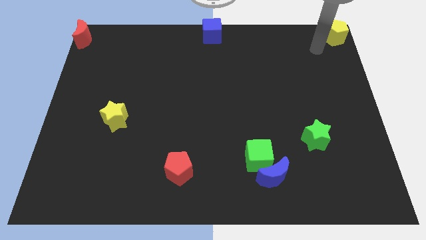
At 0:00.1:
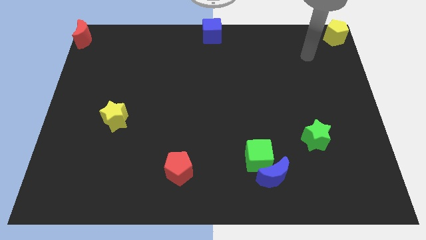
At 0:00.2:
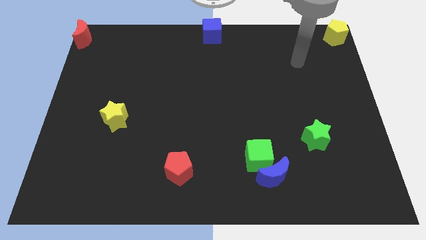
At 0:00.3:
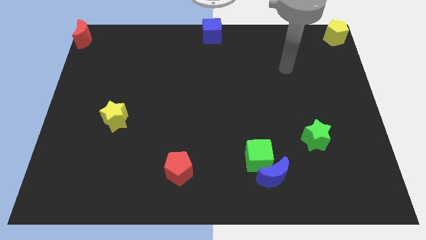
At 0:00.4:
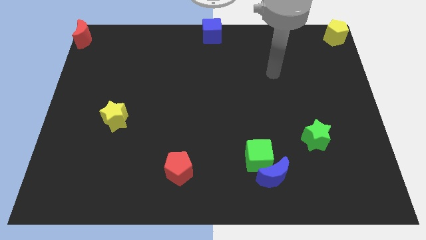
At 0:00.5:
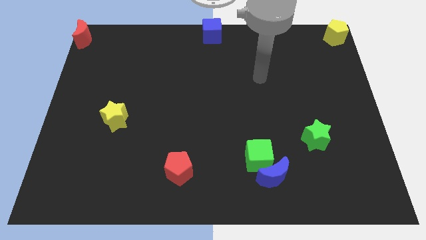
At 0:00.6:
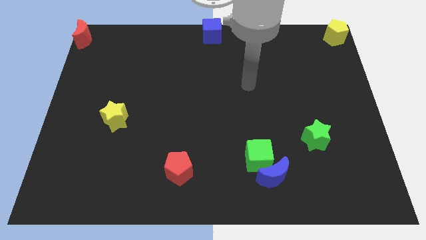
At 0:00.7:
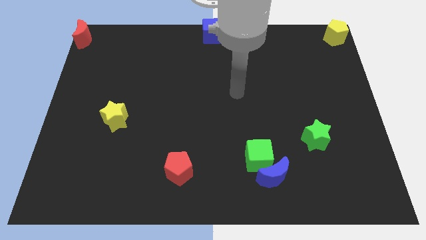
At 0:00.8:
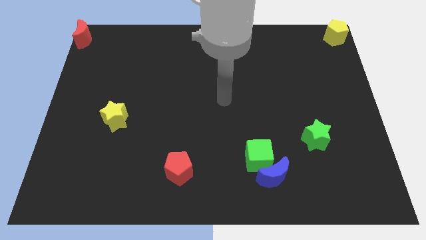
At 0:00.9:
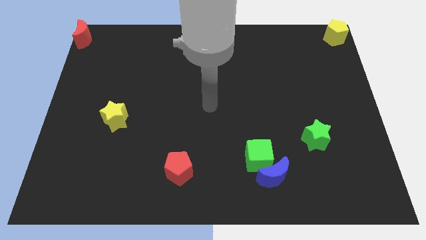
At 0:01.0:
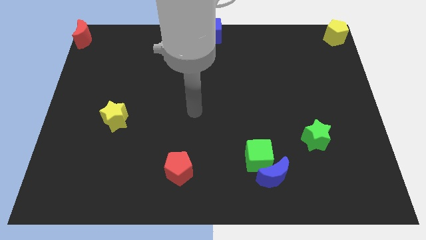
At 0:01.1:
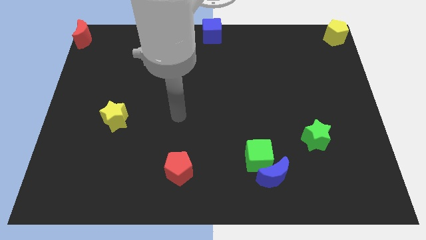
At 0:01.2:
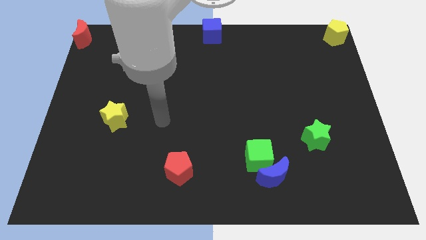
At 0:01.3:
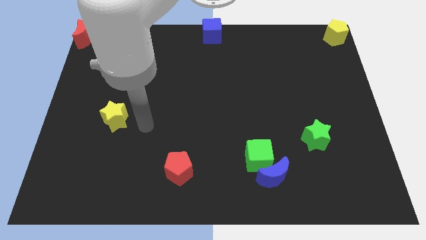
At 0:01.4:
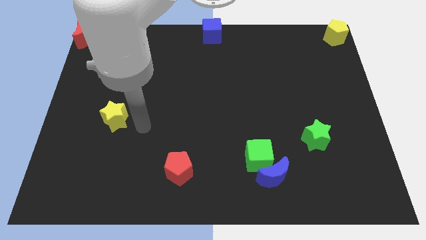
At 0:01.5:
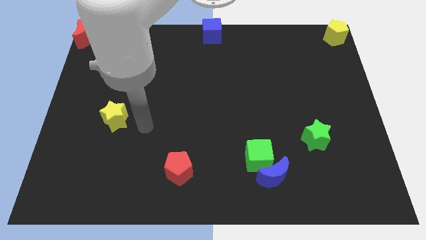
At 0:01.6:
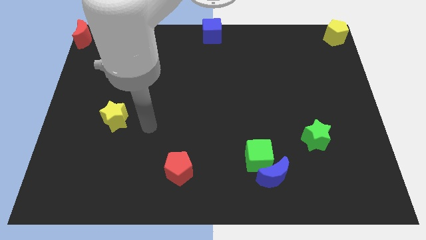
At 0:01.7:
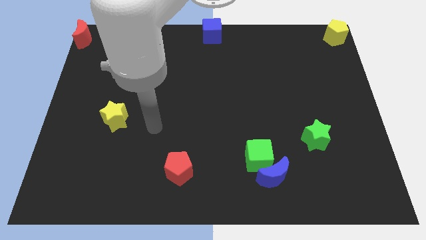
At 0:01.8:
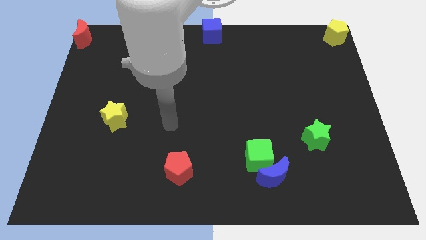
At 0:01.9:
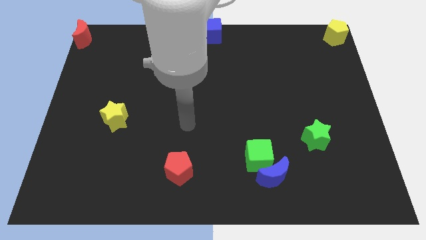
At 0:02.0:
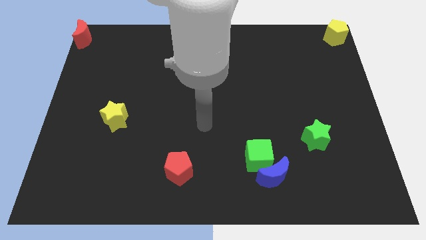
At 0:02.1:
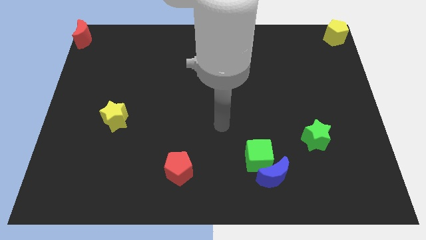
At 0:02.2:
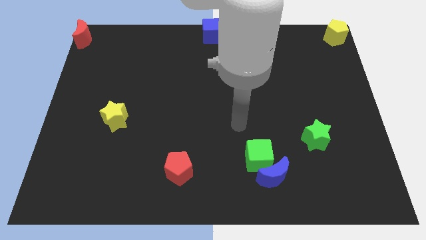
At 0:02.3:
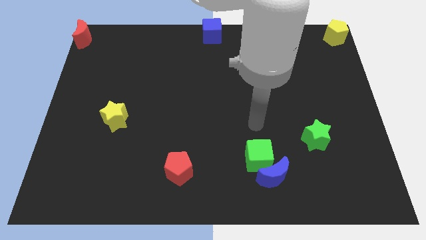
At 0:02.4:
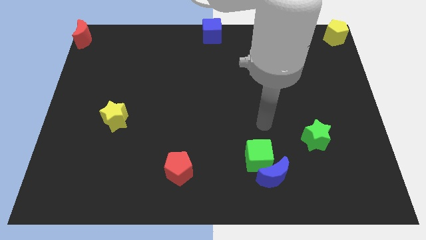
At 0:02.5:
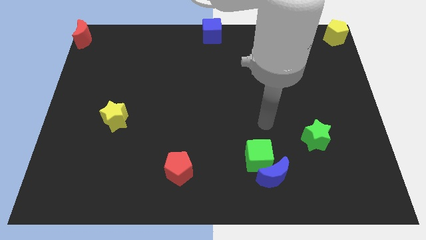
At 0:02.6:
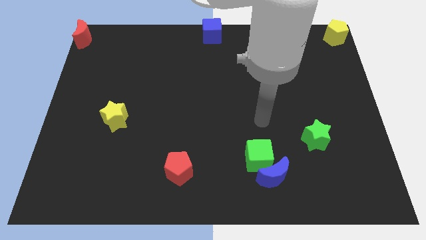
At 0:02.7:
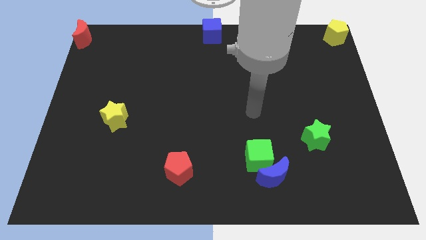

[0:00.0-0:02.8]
move your arm and point on top of green cube

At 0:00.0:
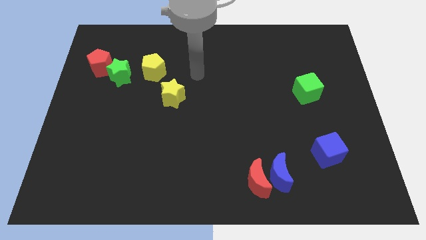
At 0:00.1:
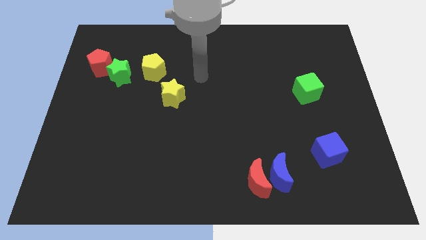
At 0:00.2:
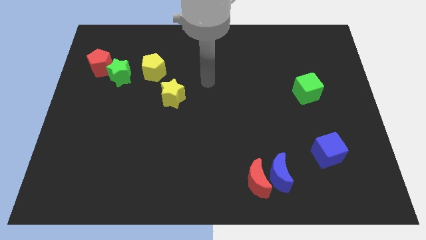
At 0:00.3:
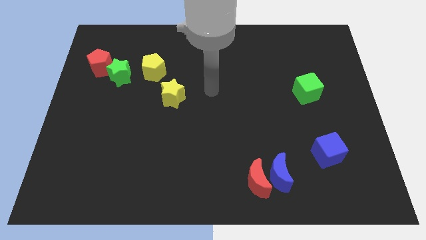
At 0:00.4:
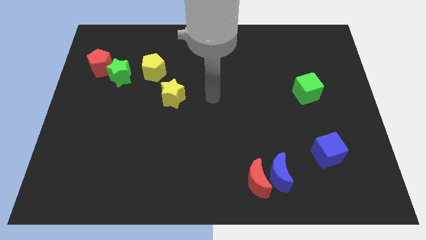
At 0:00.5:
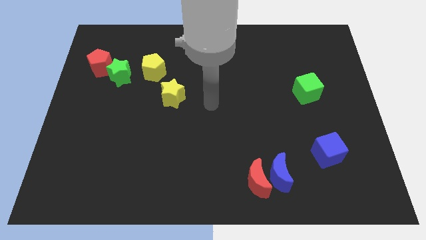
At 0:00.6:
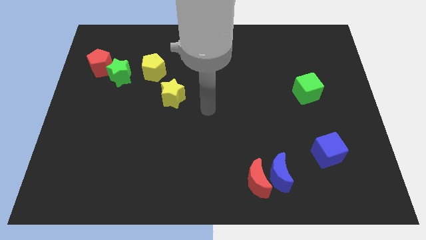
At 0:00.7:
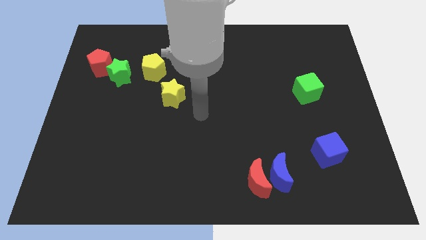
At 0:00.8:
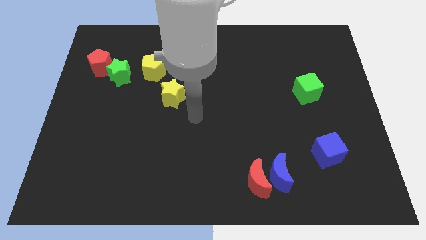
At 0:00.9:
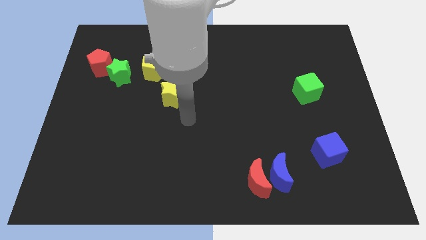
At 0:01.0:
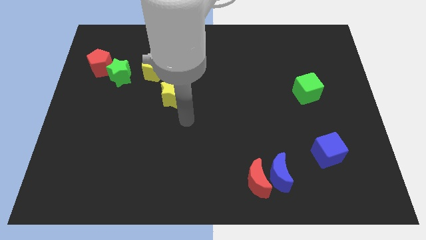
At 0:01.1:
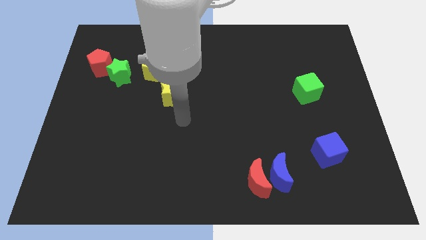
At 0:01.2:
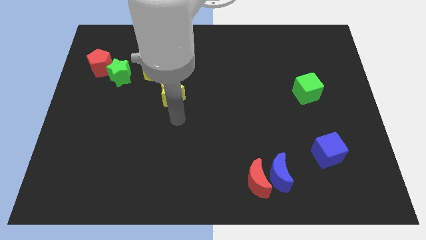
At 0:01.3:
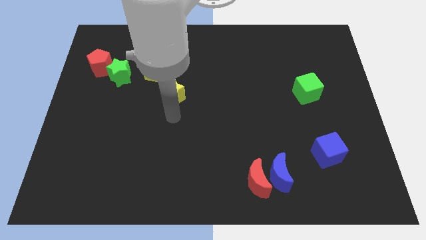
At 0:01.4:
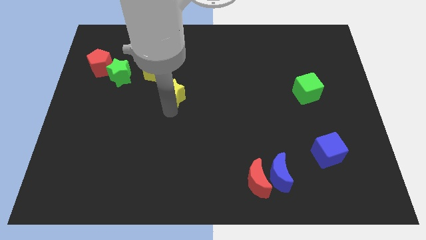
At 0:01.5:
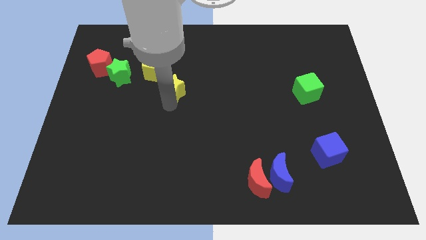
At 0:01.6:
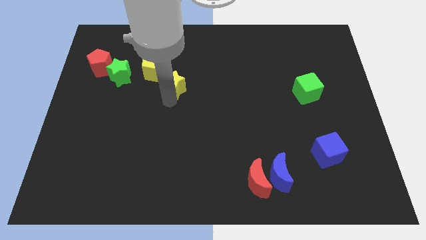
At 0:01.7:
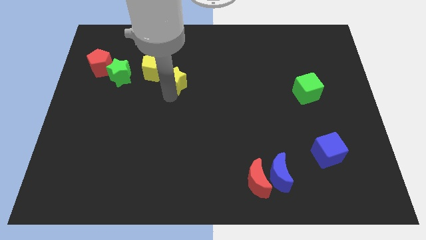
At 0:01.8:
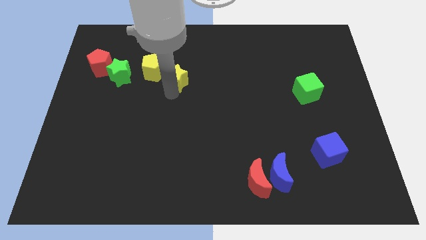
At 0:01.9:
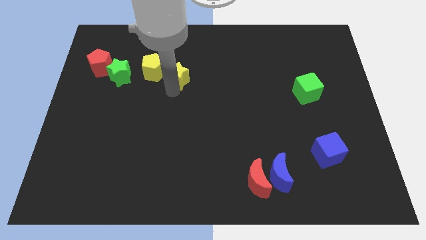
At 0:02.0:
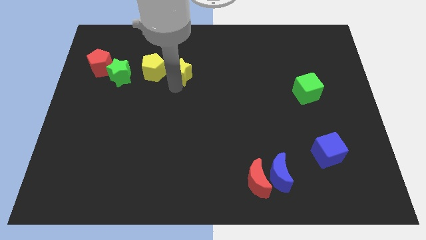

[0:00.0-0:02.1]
push the yellow star slightly towards up

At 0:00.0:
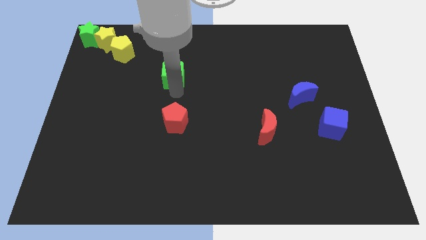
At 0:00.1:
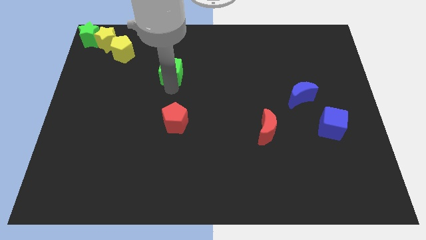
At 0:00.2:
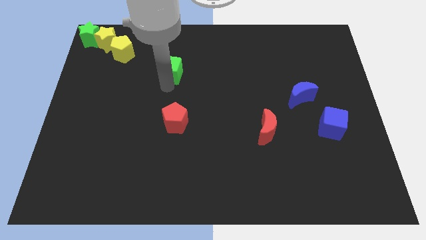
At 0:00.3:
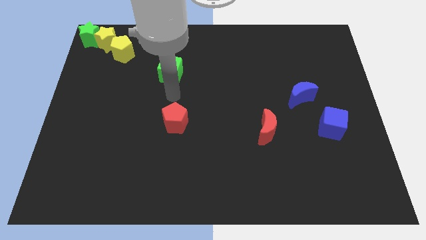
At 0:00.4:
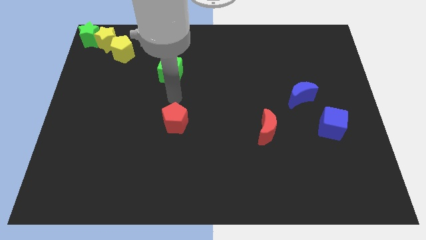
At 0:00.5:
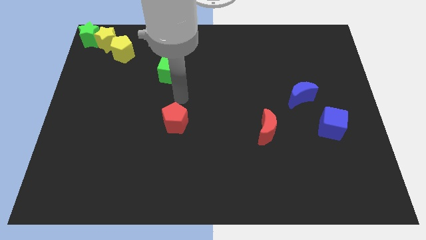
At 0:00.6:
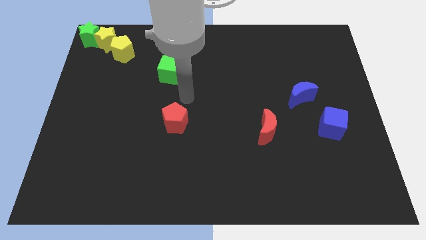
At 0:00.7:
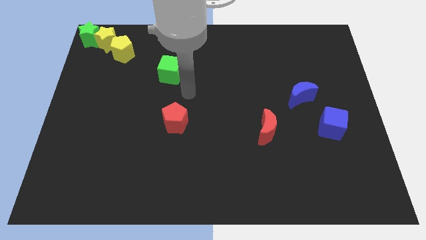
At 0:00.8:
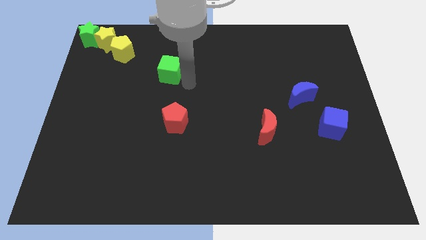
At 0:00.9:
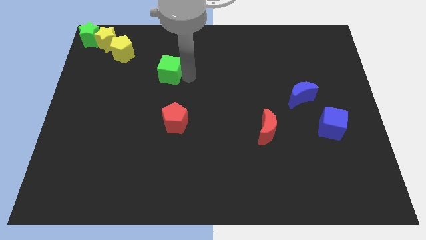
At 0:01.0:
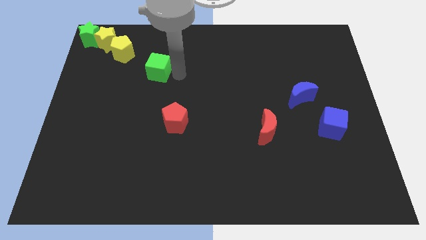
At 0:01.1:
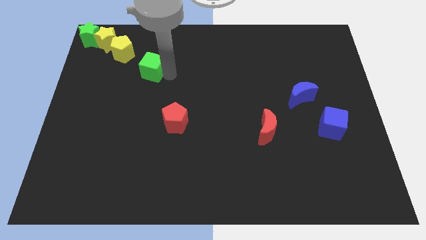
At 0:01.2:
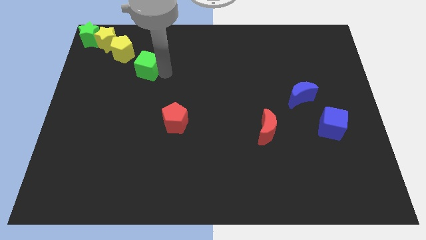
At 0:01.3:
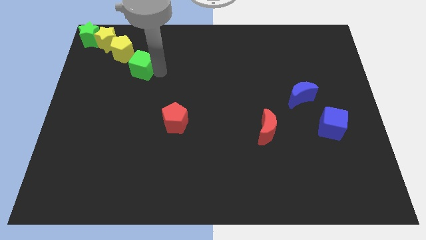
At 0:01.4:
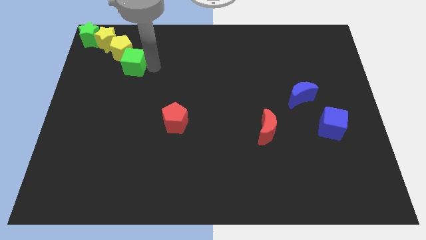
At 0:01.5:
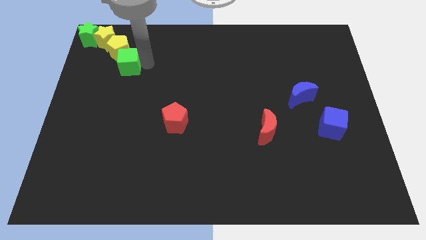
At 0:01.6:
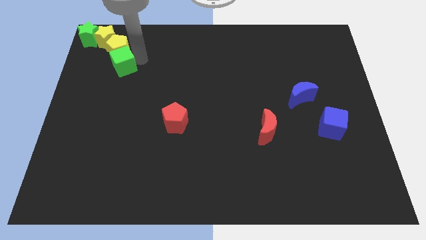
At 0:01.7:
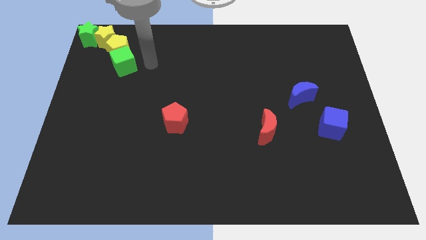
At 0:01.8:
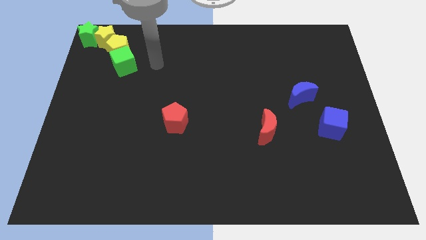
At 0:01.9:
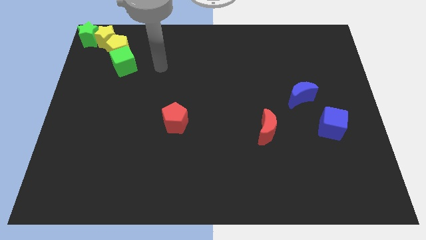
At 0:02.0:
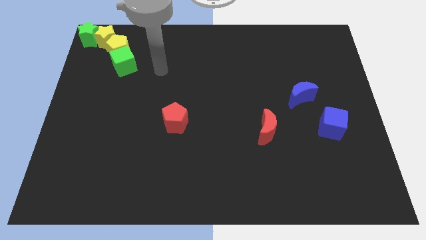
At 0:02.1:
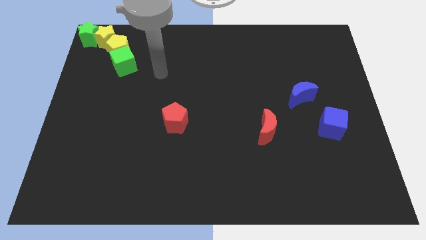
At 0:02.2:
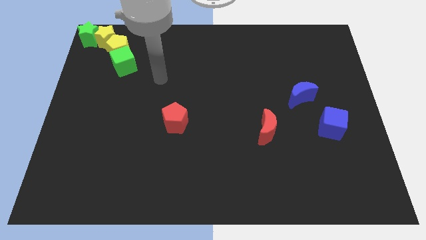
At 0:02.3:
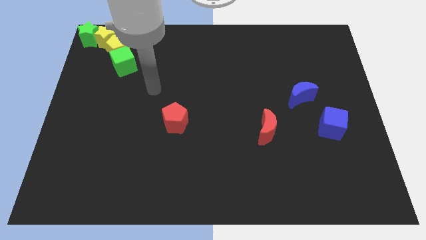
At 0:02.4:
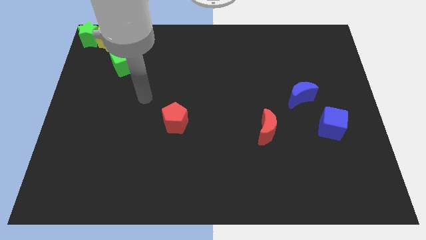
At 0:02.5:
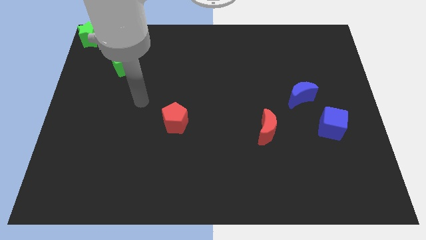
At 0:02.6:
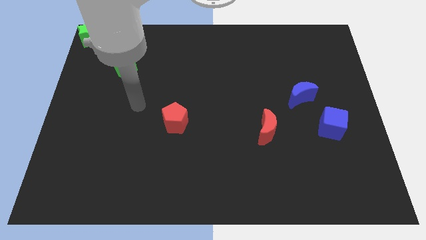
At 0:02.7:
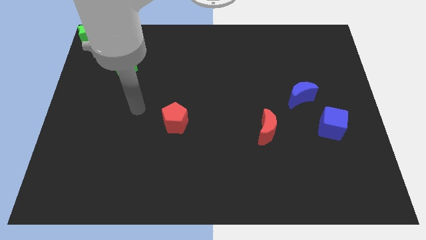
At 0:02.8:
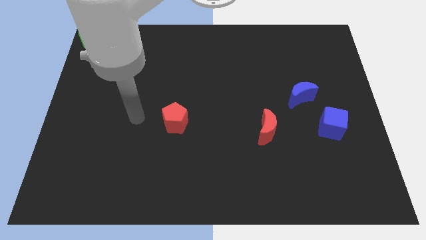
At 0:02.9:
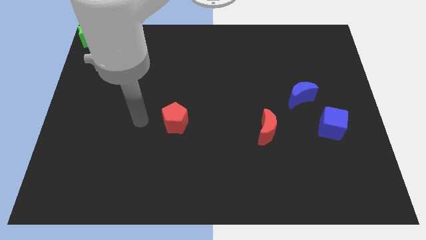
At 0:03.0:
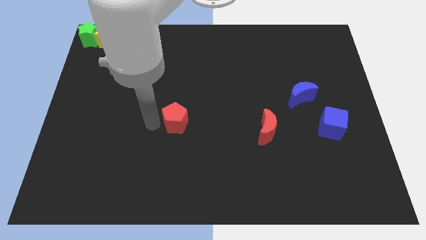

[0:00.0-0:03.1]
push the green cube into the yellow pentagon

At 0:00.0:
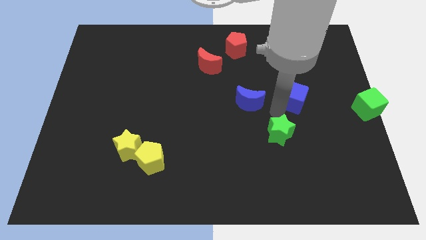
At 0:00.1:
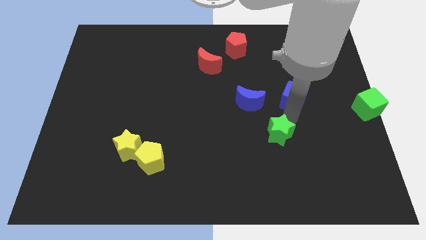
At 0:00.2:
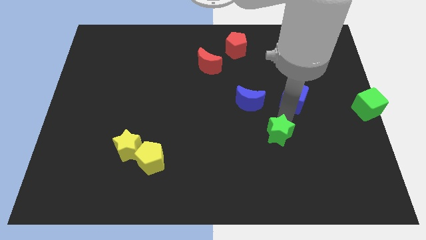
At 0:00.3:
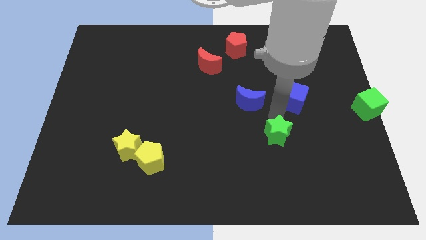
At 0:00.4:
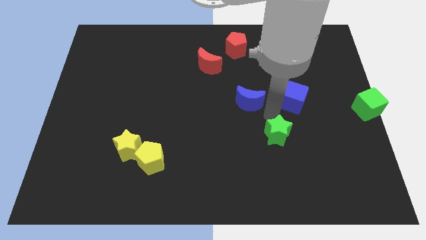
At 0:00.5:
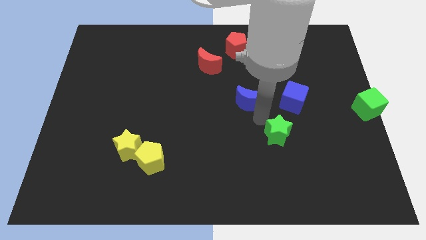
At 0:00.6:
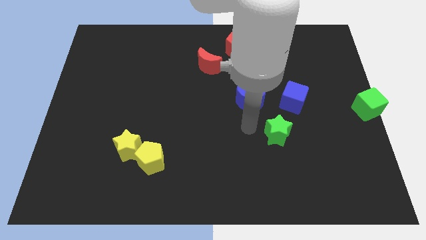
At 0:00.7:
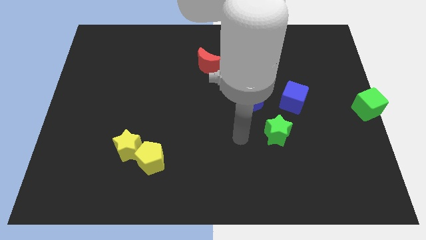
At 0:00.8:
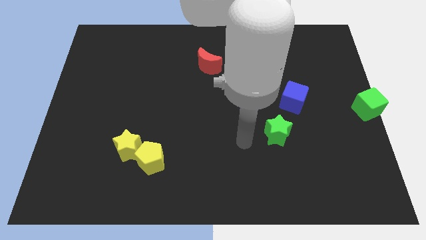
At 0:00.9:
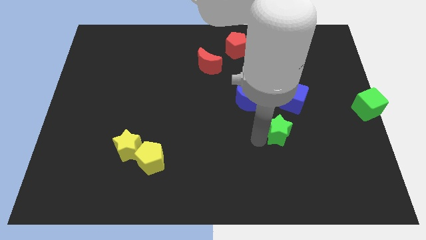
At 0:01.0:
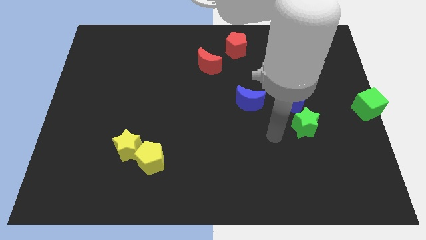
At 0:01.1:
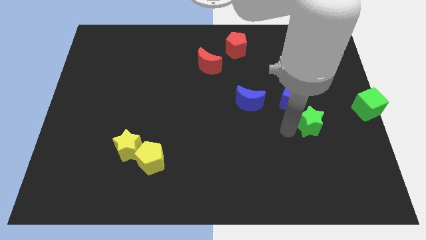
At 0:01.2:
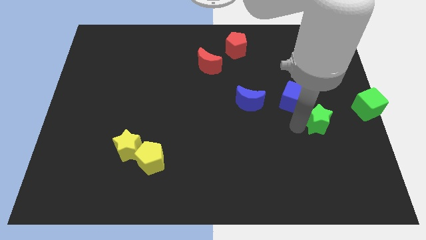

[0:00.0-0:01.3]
push the green star closer to the green cube
